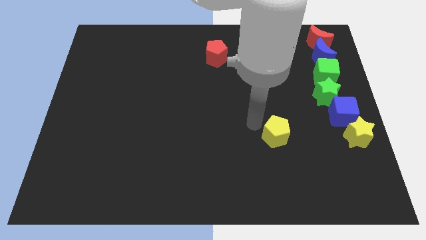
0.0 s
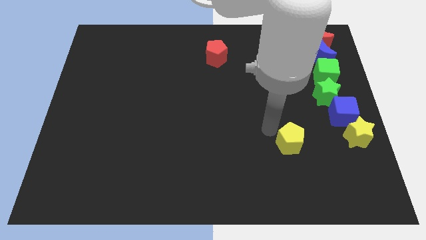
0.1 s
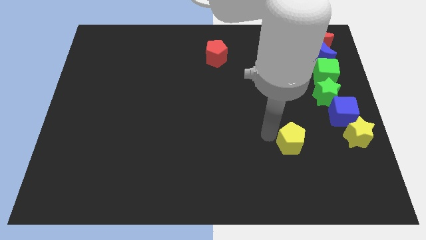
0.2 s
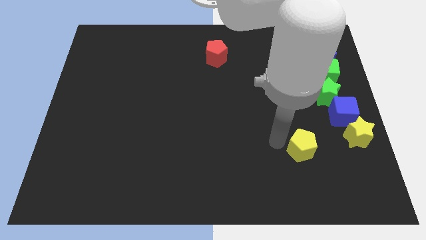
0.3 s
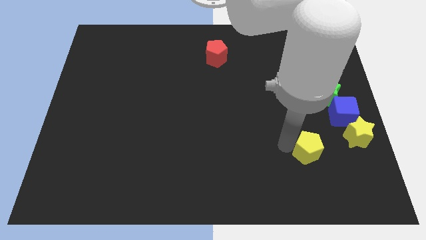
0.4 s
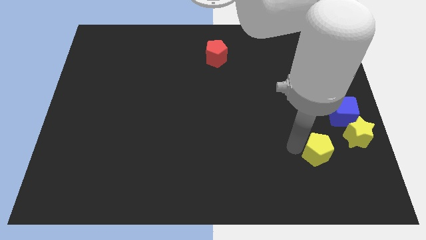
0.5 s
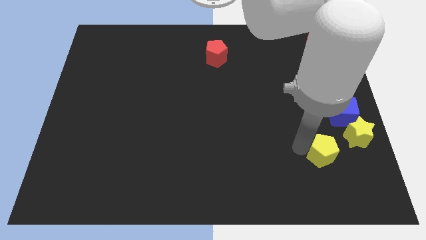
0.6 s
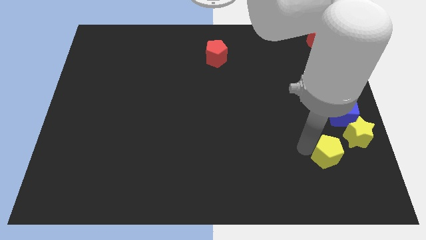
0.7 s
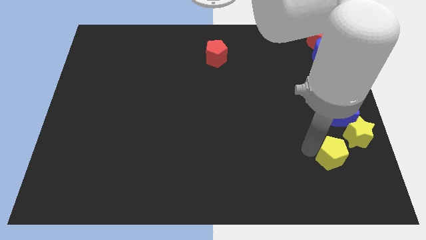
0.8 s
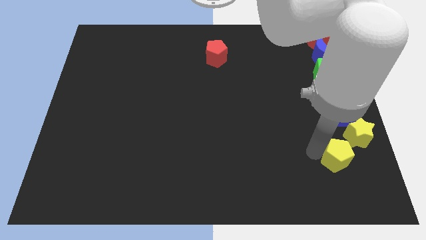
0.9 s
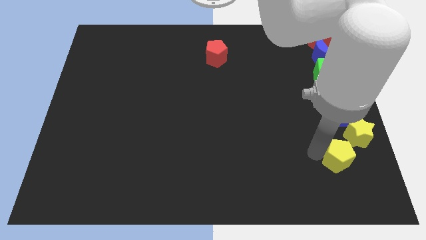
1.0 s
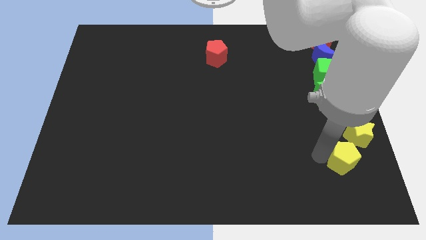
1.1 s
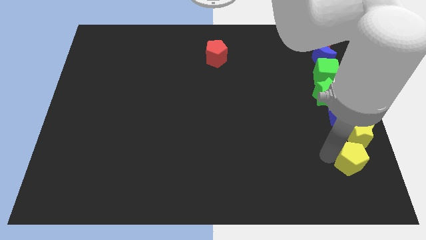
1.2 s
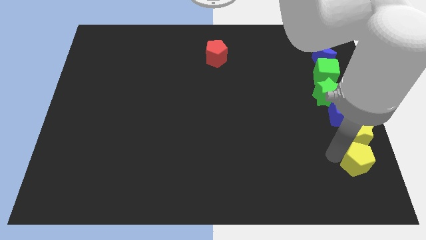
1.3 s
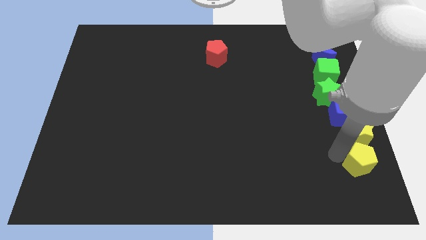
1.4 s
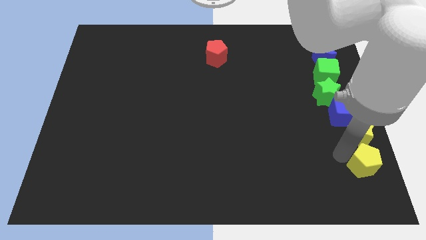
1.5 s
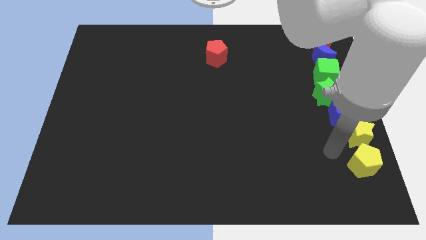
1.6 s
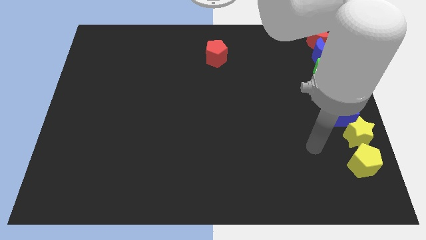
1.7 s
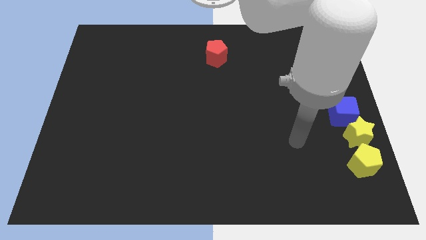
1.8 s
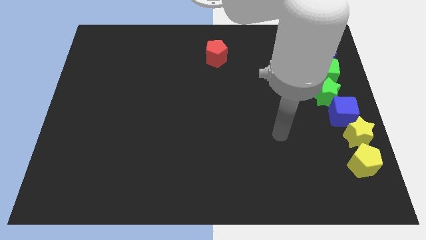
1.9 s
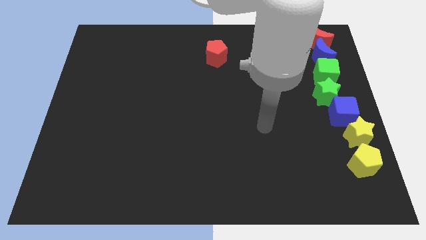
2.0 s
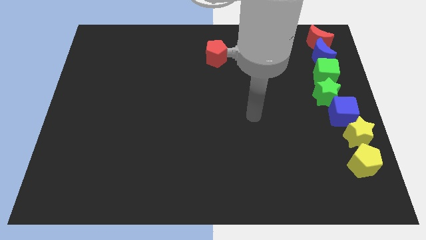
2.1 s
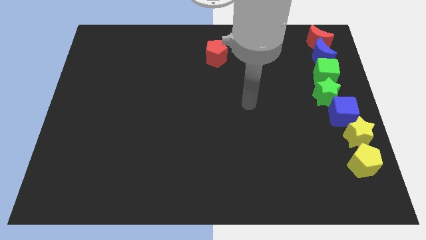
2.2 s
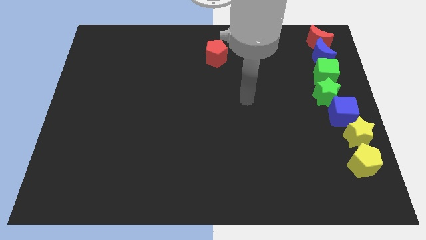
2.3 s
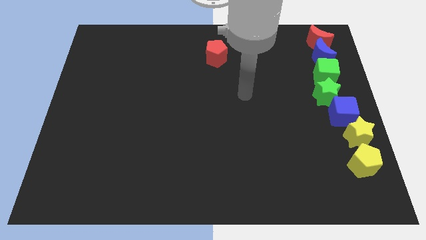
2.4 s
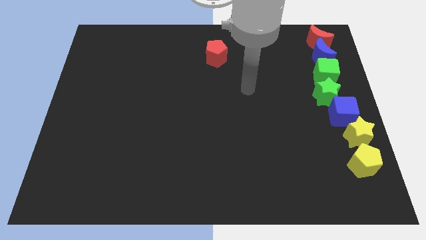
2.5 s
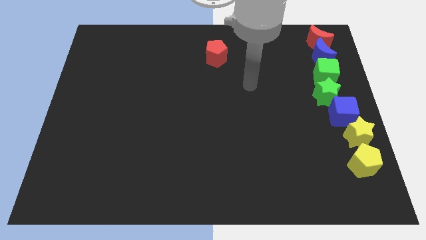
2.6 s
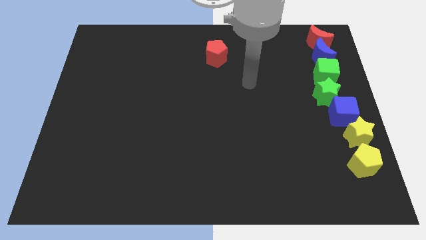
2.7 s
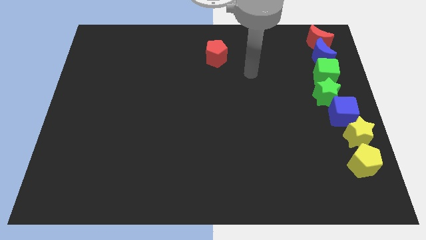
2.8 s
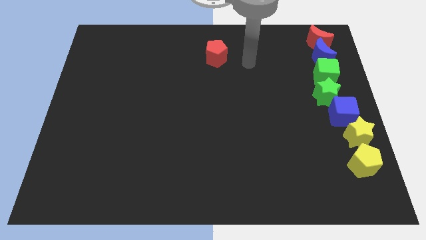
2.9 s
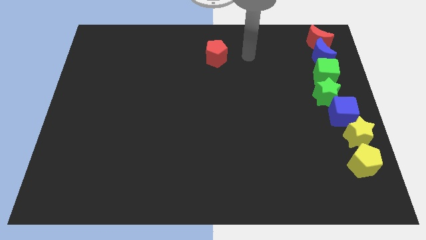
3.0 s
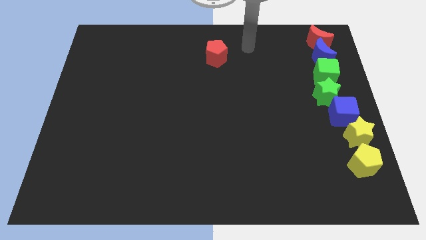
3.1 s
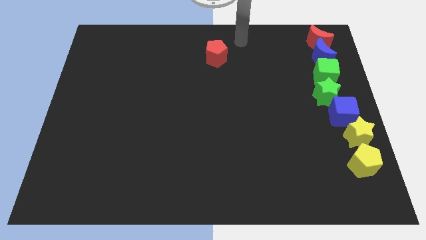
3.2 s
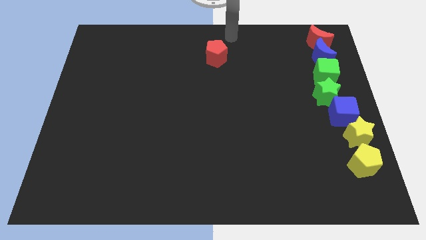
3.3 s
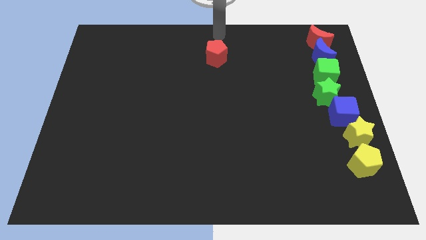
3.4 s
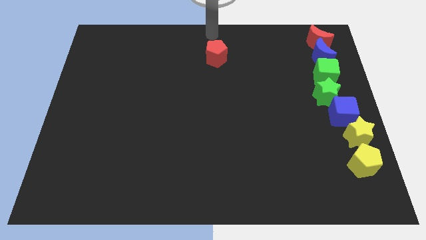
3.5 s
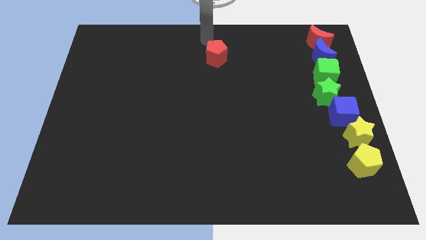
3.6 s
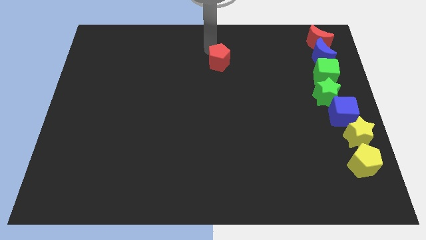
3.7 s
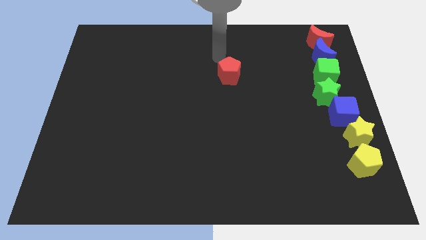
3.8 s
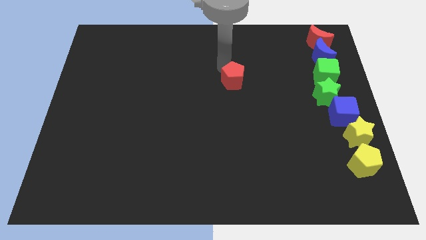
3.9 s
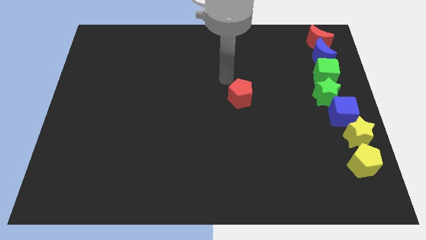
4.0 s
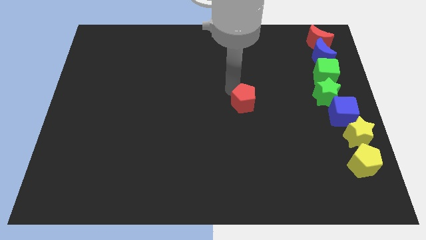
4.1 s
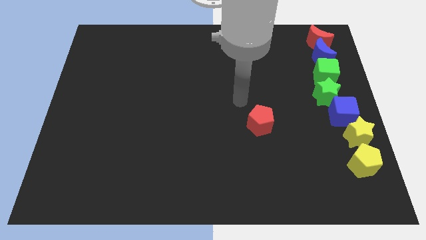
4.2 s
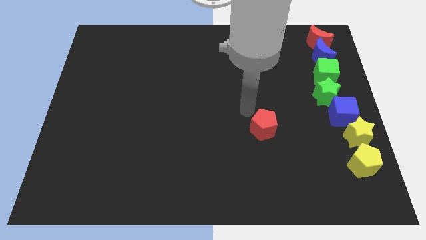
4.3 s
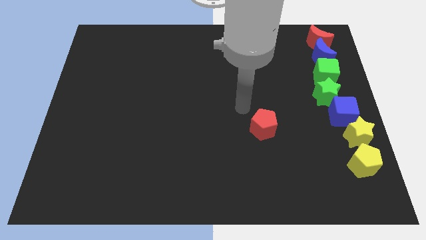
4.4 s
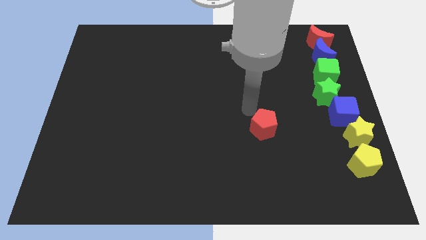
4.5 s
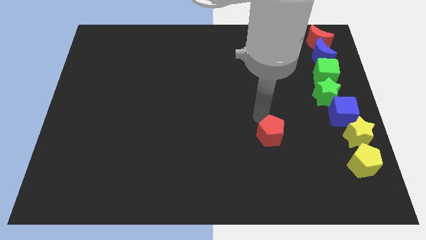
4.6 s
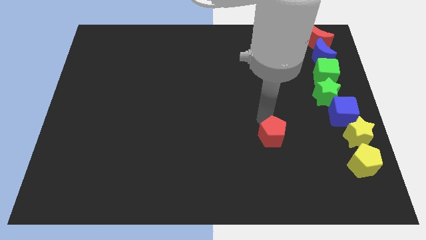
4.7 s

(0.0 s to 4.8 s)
push the red crescent diagonal to the left of the yellow star

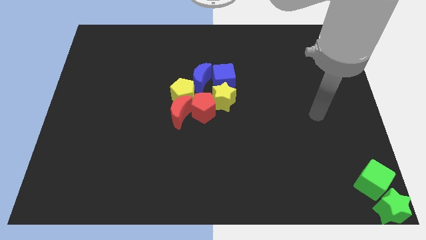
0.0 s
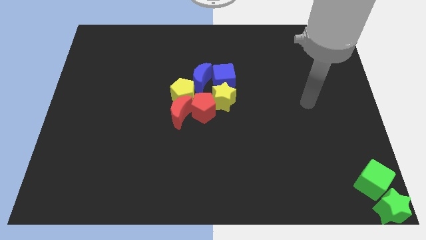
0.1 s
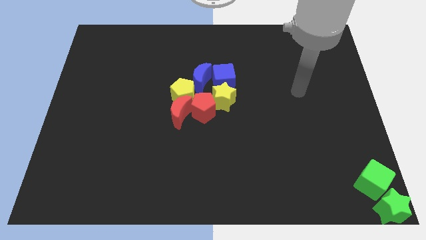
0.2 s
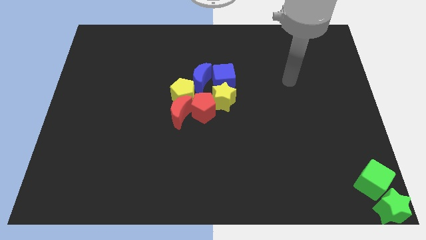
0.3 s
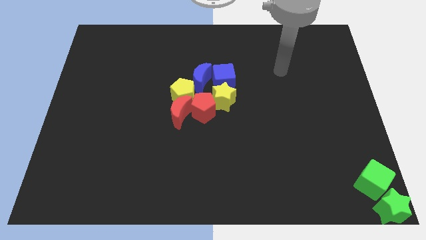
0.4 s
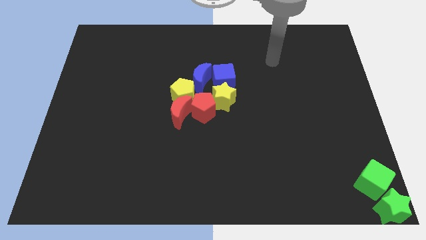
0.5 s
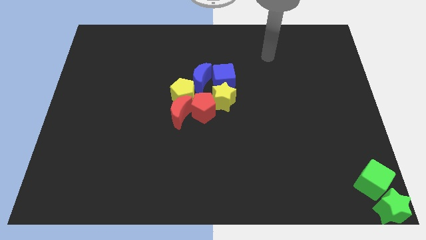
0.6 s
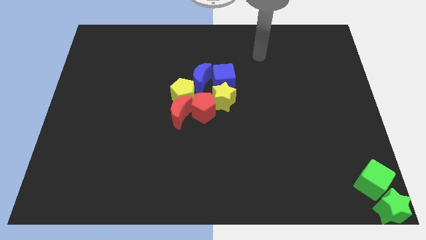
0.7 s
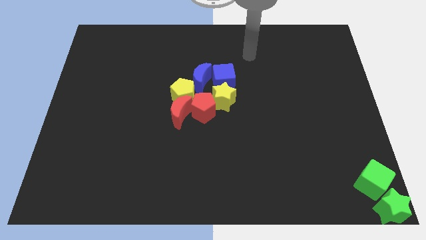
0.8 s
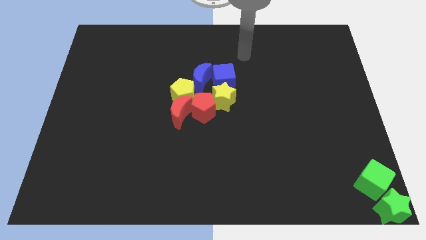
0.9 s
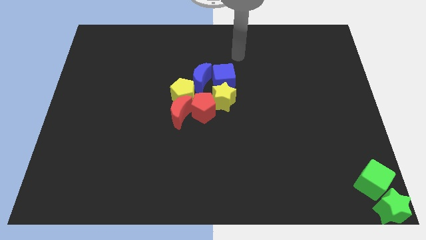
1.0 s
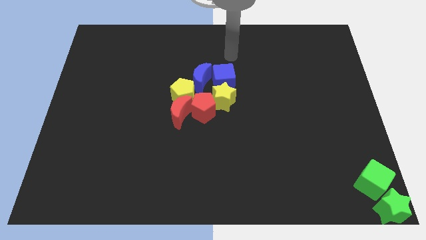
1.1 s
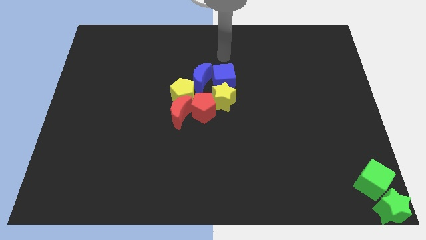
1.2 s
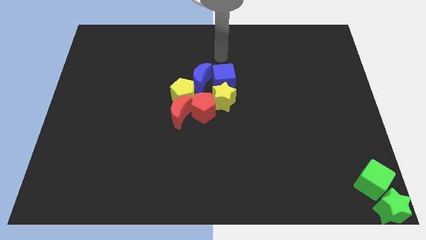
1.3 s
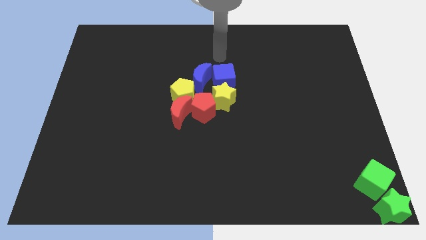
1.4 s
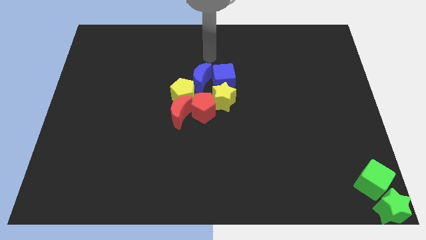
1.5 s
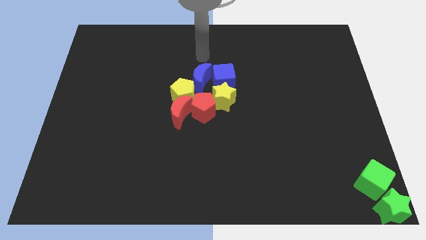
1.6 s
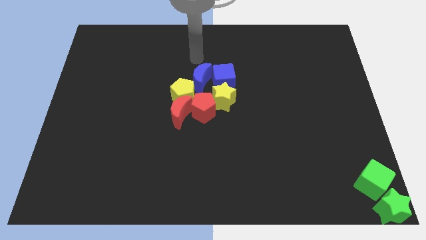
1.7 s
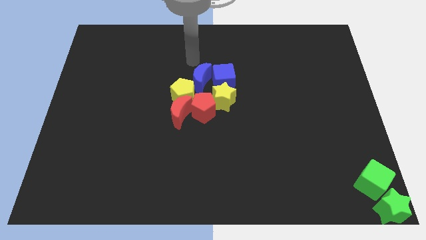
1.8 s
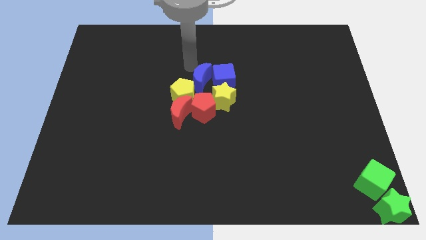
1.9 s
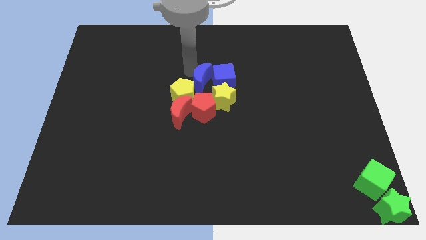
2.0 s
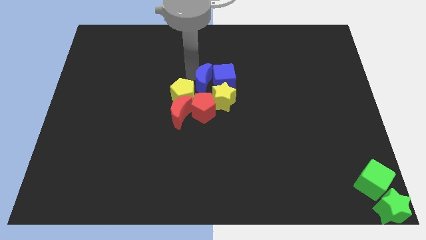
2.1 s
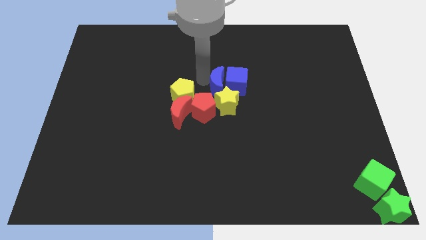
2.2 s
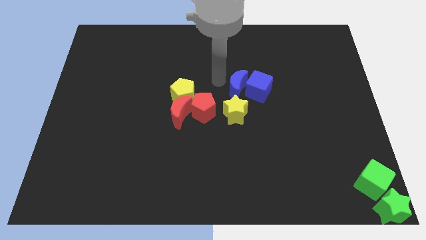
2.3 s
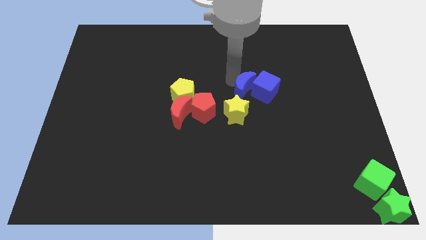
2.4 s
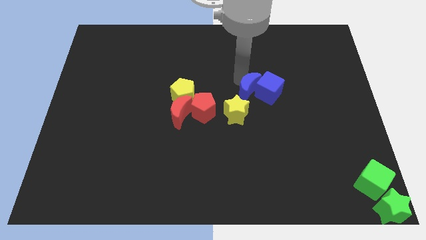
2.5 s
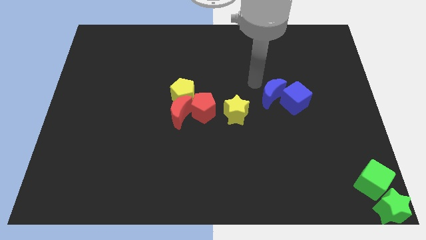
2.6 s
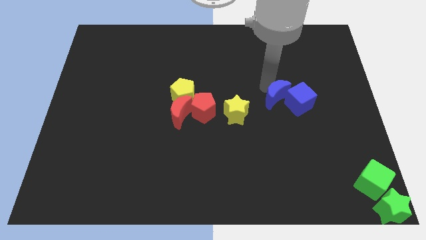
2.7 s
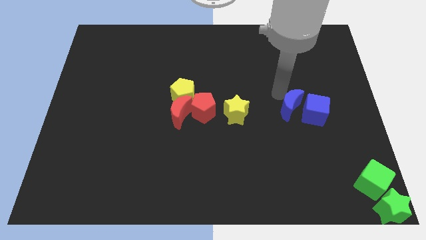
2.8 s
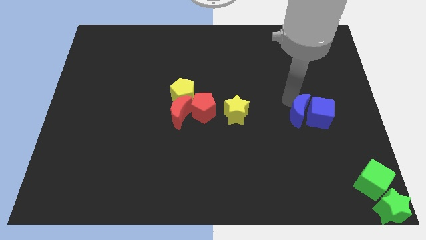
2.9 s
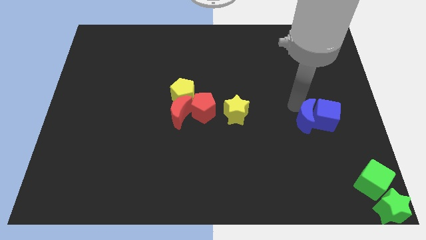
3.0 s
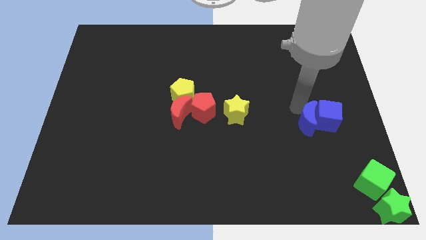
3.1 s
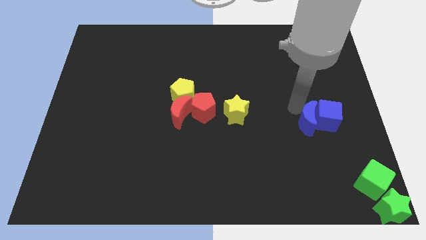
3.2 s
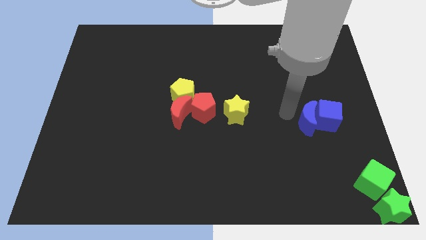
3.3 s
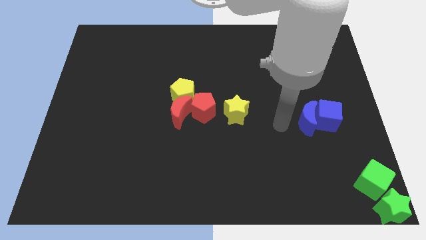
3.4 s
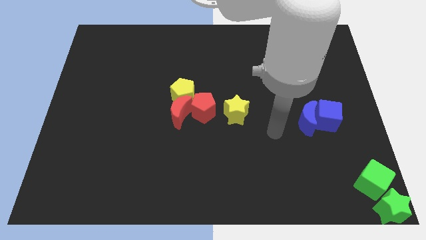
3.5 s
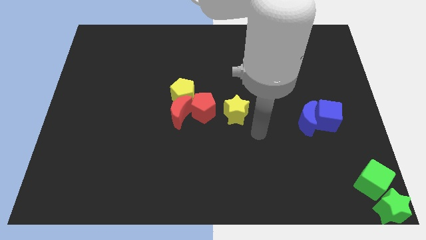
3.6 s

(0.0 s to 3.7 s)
separate the blue blocks from the group of red and yellow blocks

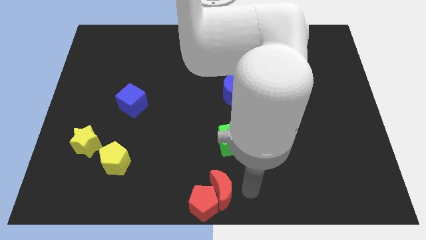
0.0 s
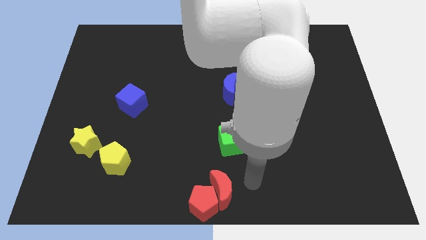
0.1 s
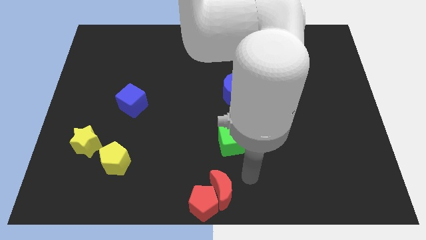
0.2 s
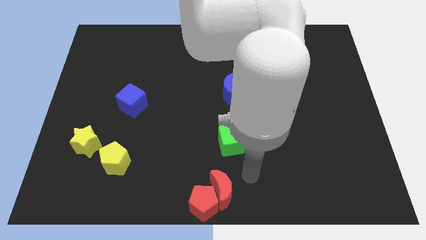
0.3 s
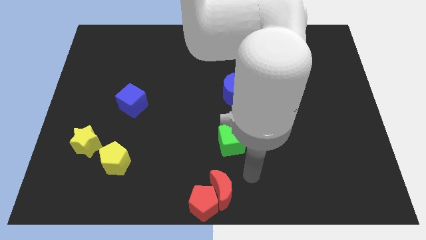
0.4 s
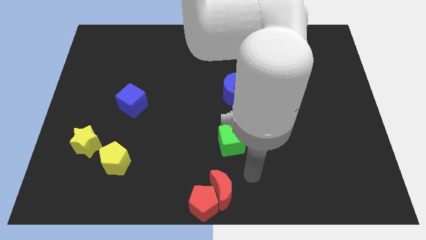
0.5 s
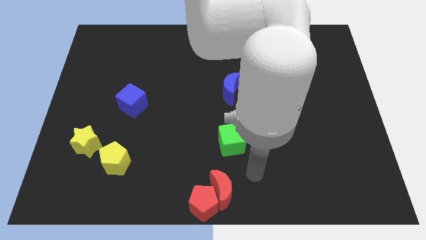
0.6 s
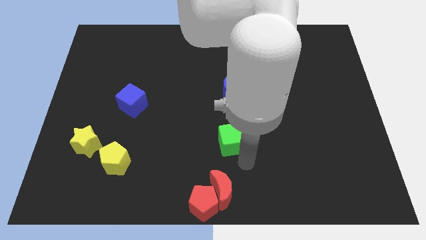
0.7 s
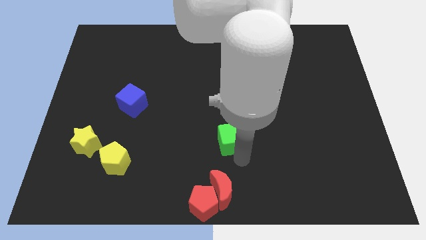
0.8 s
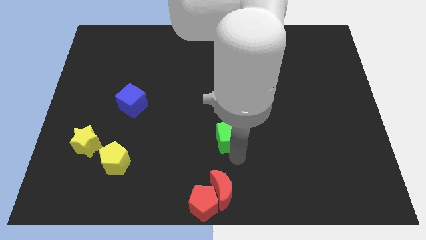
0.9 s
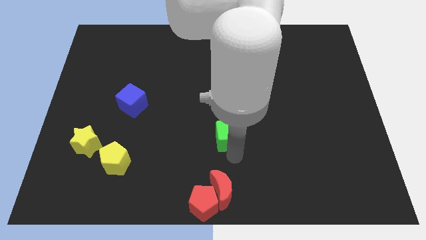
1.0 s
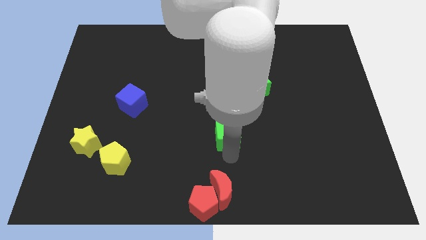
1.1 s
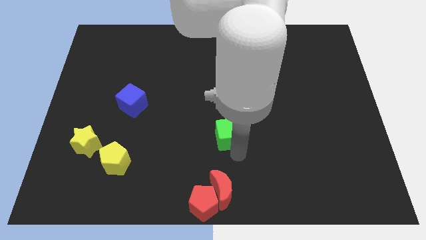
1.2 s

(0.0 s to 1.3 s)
place your arm below the green cube
